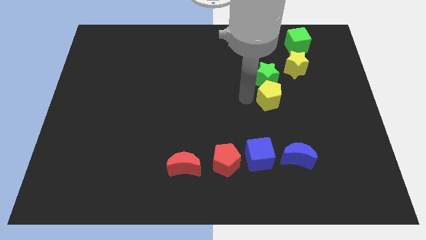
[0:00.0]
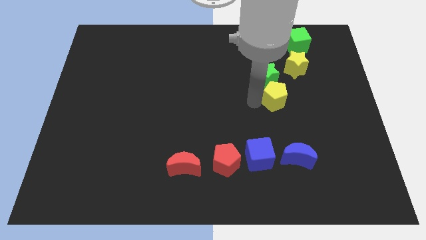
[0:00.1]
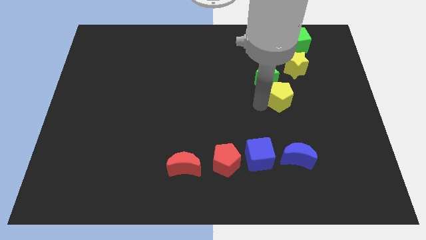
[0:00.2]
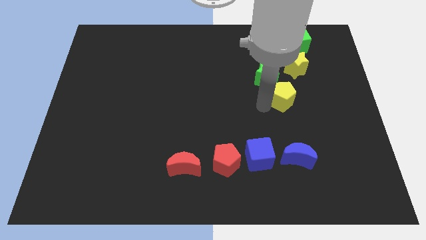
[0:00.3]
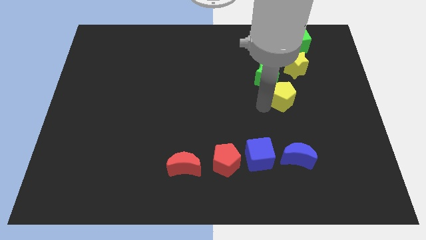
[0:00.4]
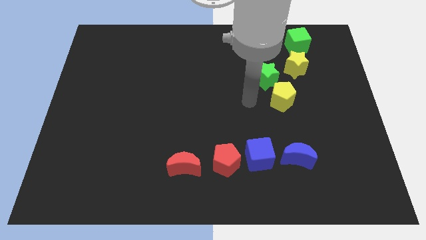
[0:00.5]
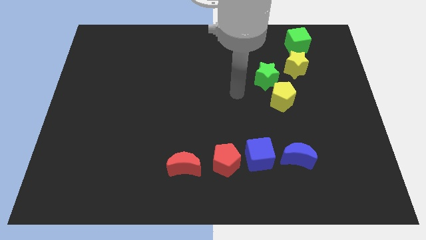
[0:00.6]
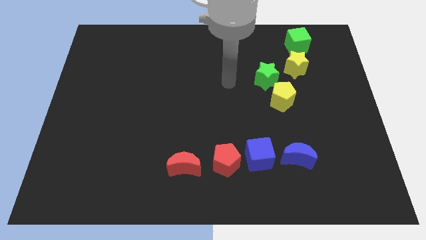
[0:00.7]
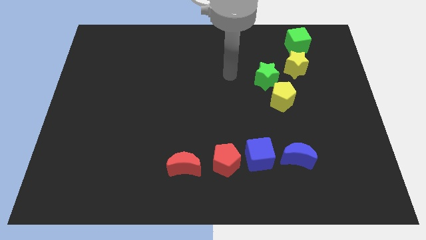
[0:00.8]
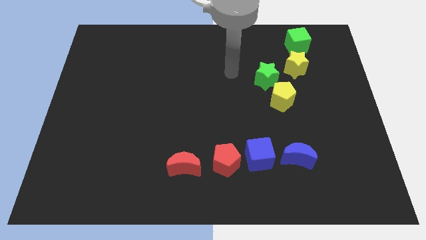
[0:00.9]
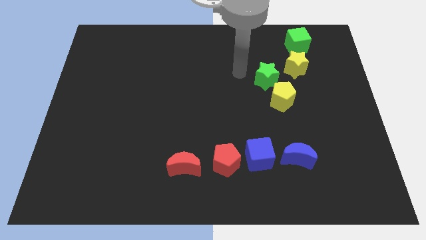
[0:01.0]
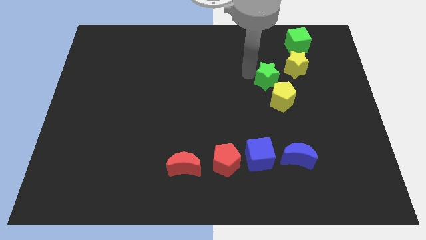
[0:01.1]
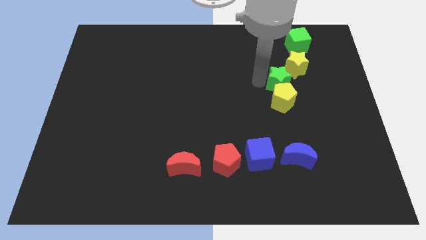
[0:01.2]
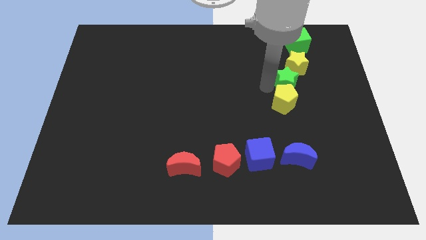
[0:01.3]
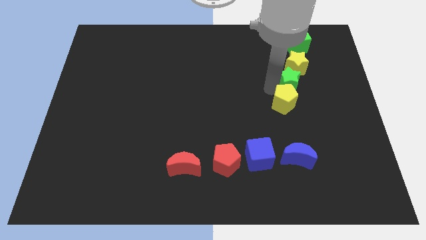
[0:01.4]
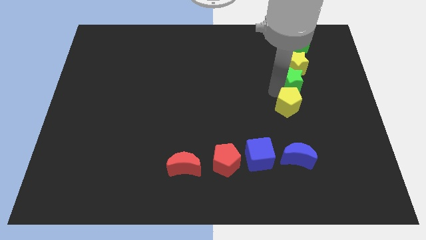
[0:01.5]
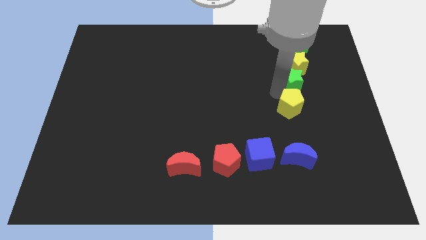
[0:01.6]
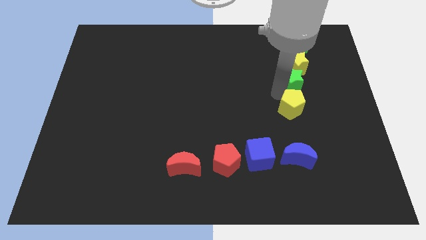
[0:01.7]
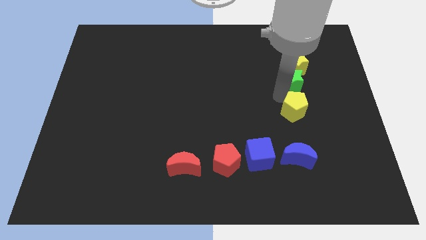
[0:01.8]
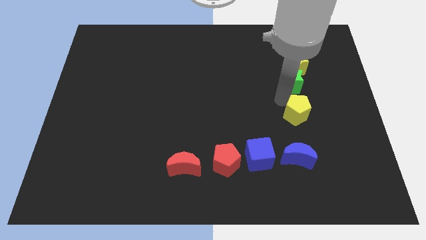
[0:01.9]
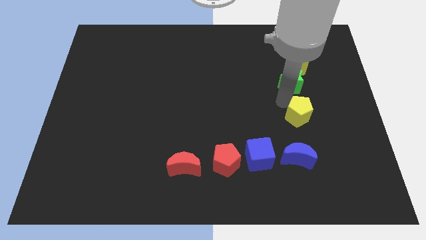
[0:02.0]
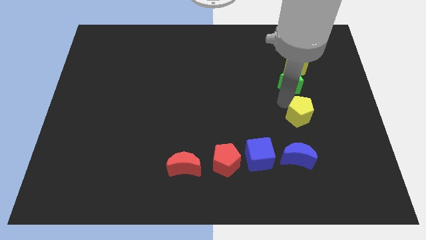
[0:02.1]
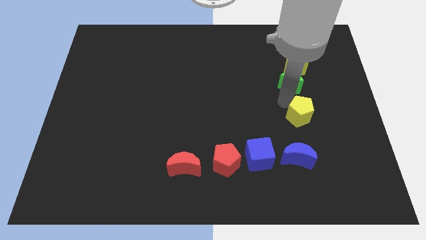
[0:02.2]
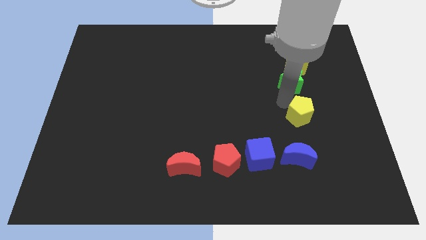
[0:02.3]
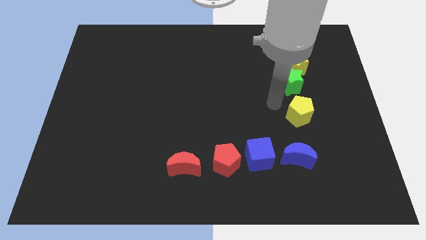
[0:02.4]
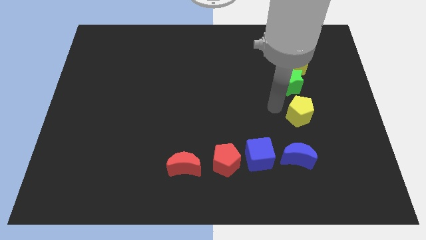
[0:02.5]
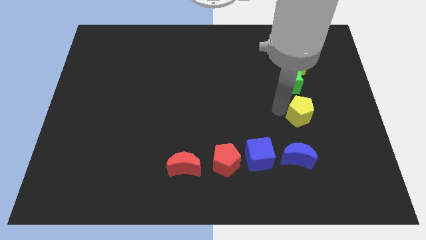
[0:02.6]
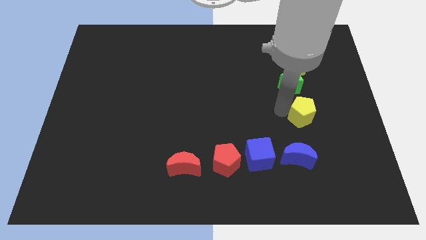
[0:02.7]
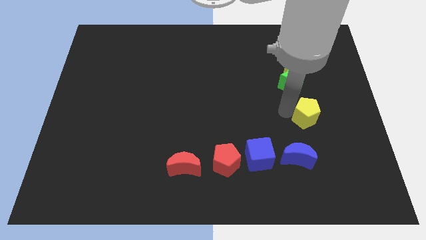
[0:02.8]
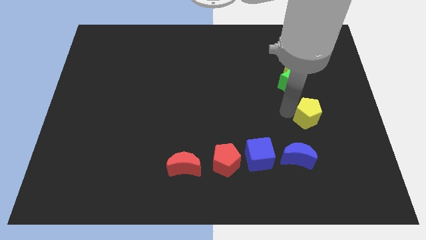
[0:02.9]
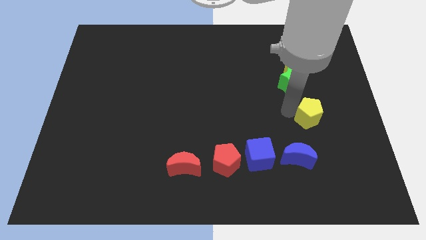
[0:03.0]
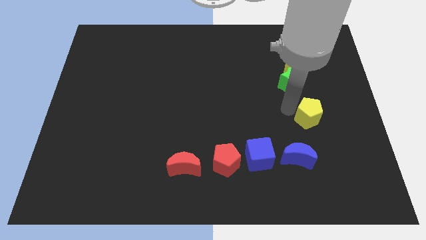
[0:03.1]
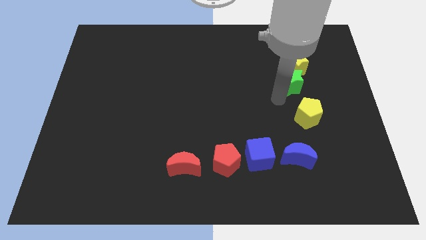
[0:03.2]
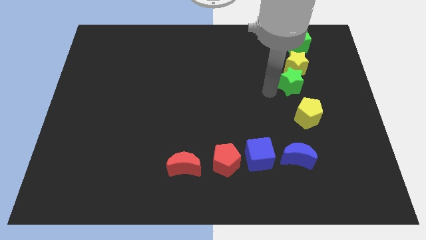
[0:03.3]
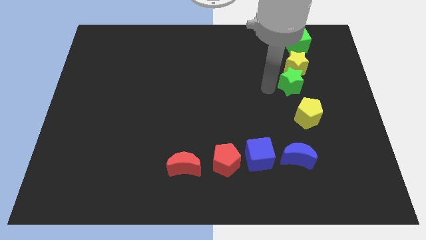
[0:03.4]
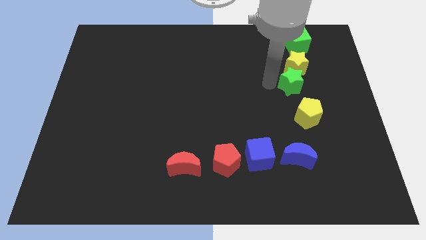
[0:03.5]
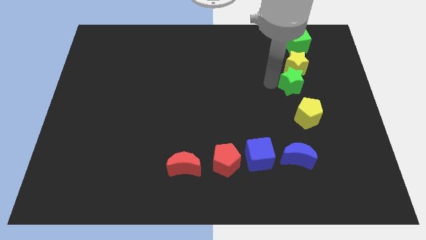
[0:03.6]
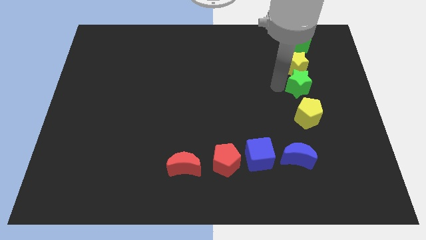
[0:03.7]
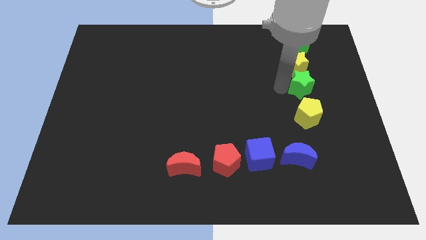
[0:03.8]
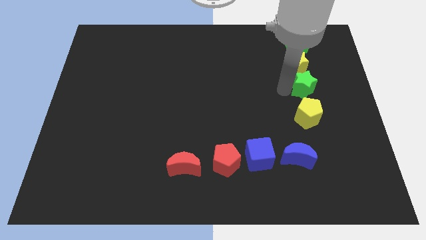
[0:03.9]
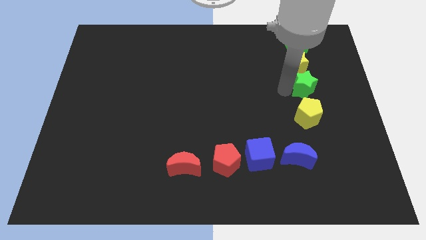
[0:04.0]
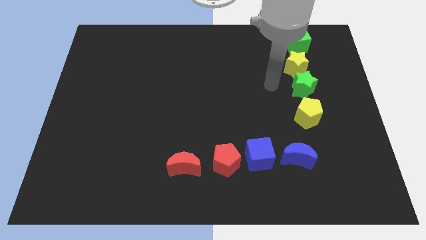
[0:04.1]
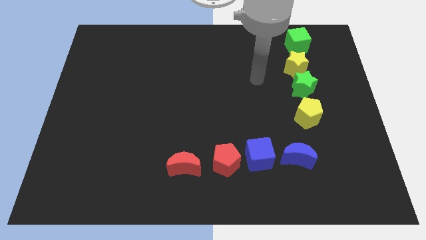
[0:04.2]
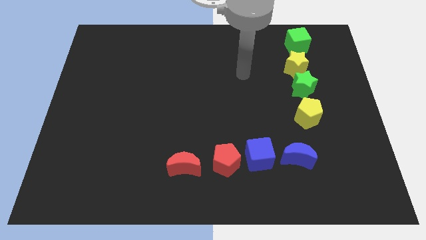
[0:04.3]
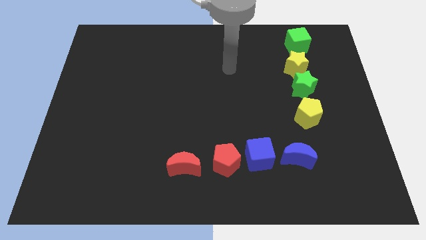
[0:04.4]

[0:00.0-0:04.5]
push the green star and yellow pentagon in a vertical line

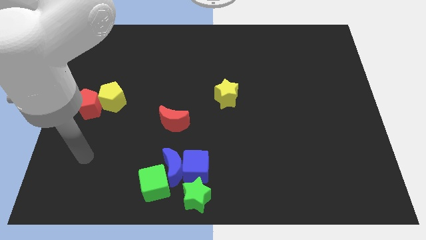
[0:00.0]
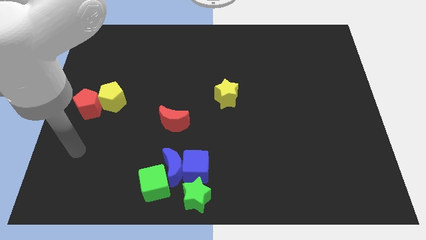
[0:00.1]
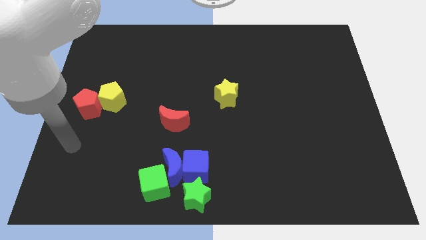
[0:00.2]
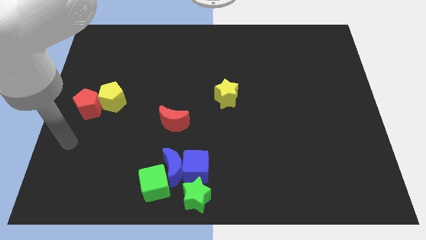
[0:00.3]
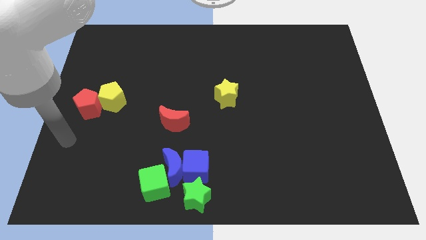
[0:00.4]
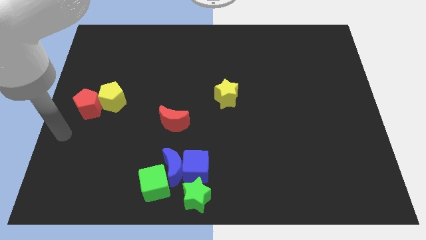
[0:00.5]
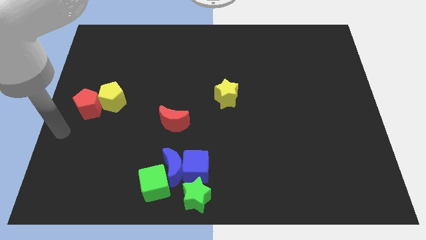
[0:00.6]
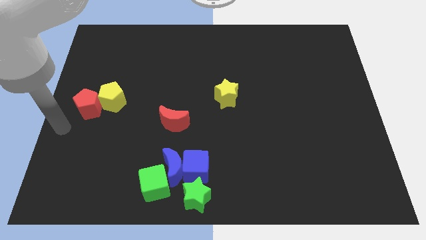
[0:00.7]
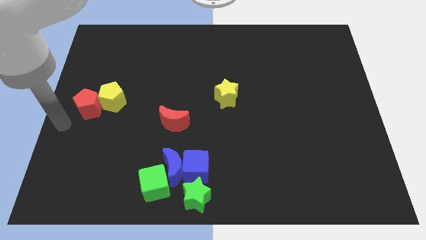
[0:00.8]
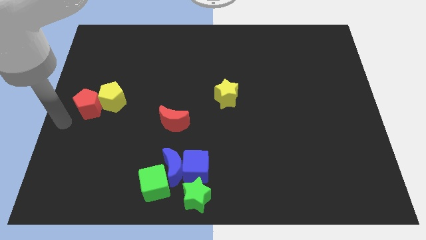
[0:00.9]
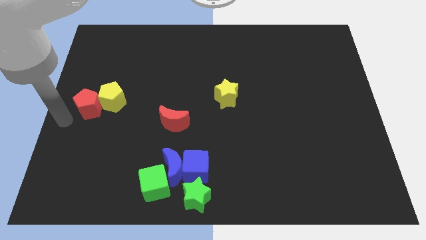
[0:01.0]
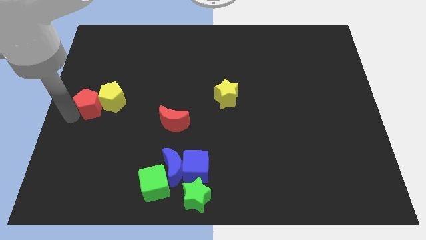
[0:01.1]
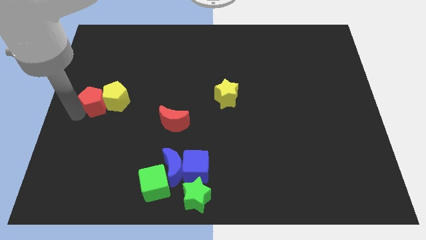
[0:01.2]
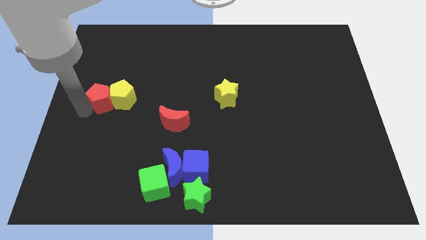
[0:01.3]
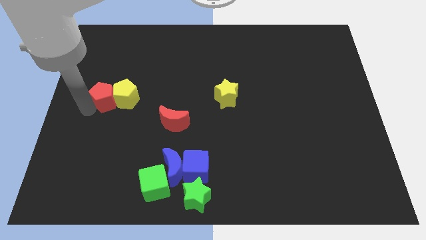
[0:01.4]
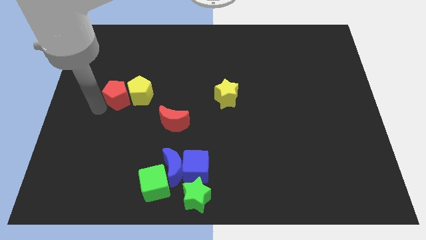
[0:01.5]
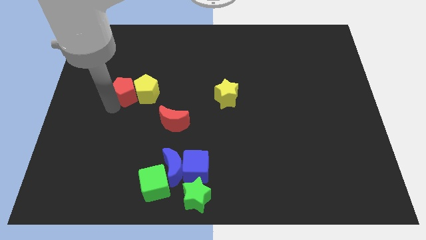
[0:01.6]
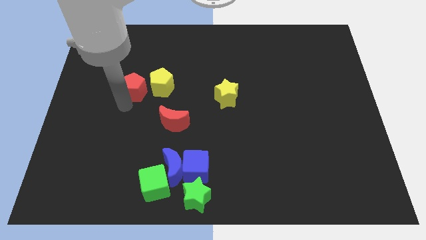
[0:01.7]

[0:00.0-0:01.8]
push the red pentagon into the yellow pentagon

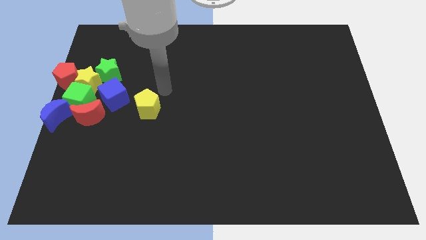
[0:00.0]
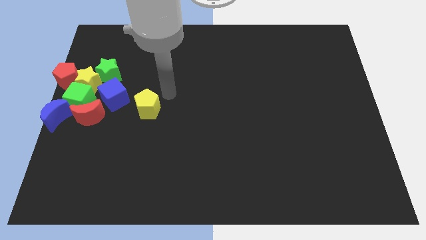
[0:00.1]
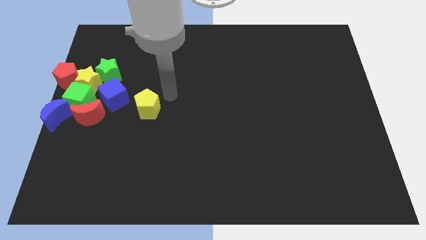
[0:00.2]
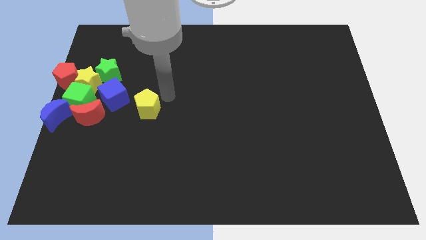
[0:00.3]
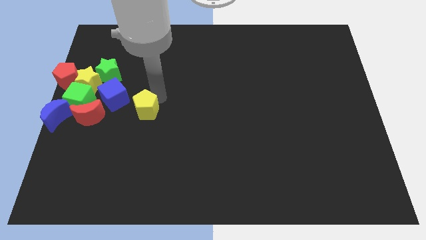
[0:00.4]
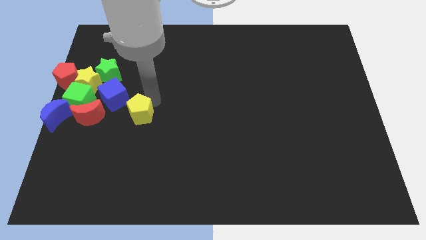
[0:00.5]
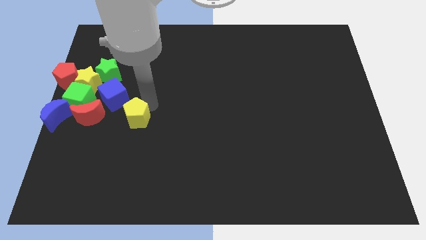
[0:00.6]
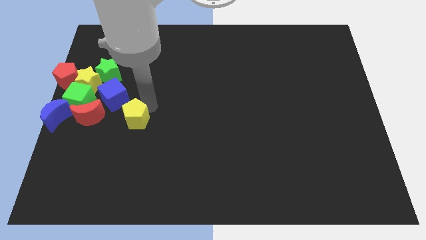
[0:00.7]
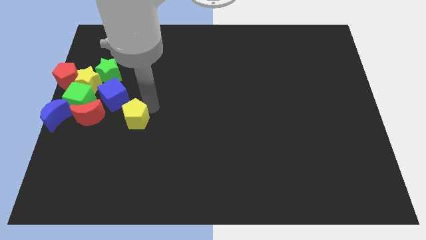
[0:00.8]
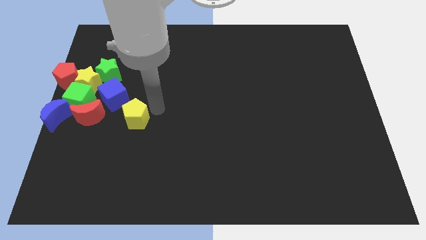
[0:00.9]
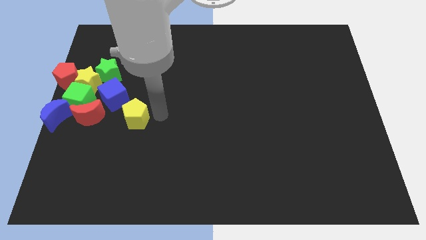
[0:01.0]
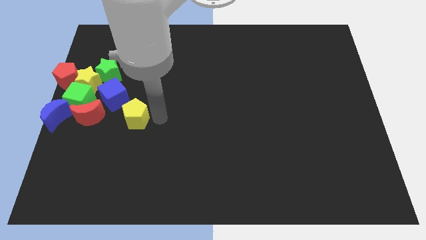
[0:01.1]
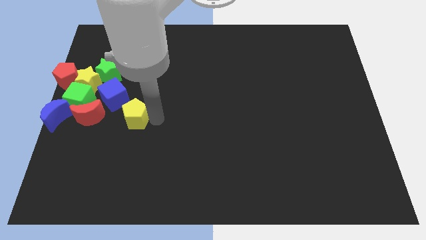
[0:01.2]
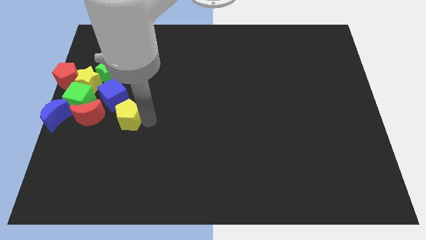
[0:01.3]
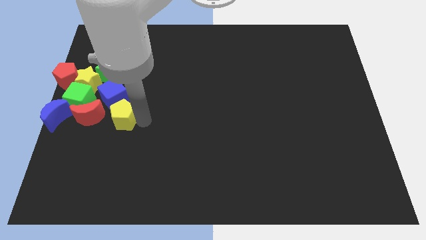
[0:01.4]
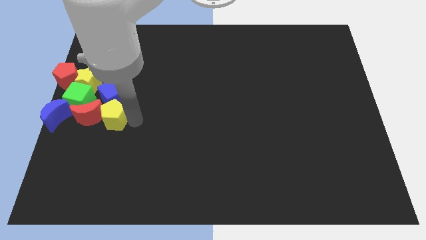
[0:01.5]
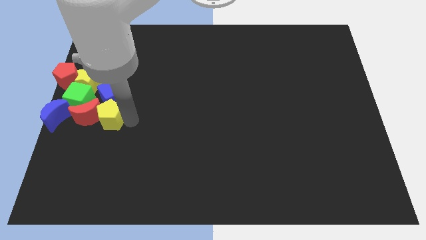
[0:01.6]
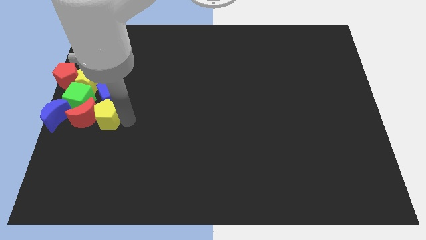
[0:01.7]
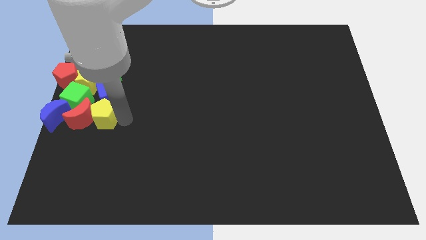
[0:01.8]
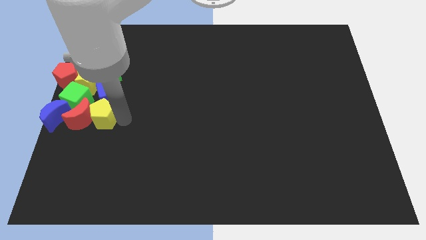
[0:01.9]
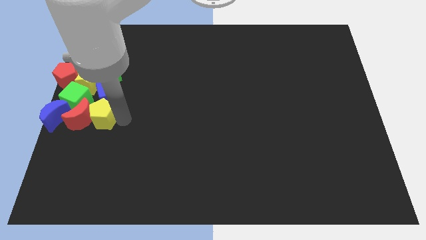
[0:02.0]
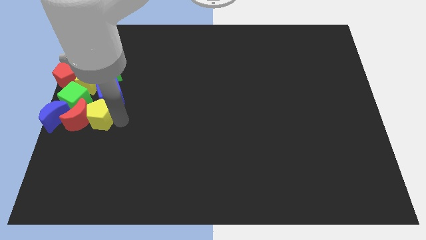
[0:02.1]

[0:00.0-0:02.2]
push yellow pentagon into the group of blocks at the middle left corner of the board

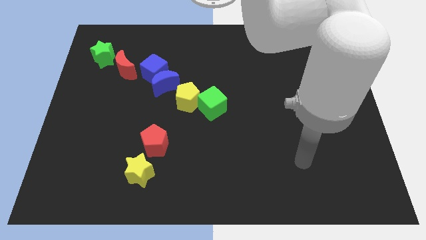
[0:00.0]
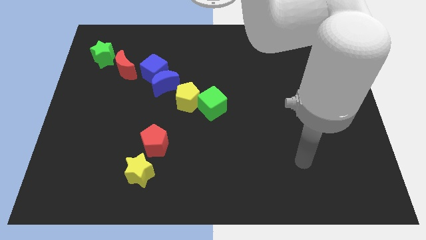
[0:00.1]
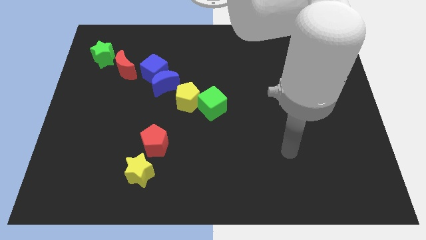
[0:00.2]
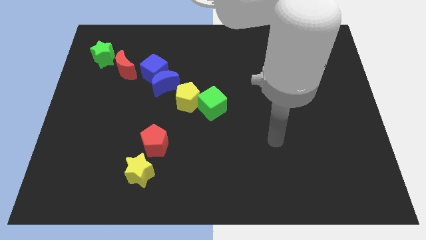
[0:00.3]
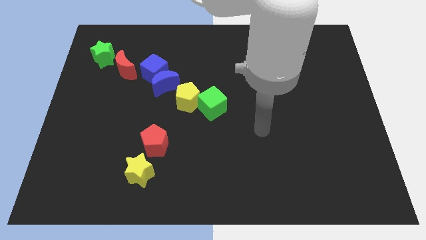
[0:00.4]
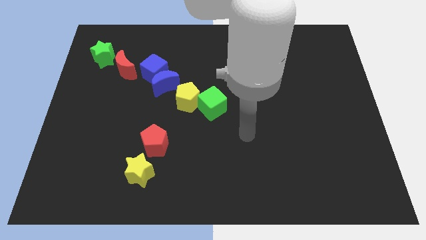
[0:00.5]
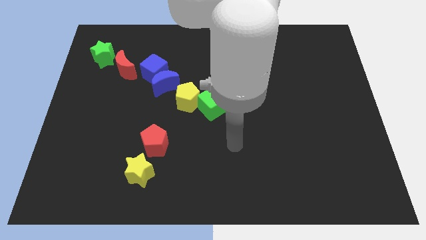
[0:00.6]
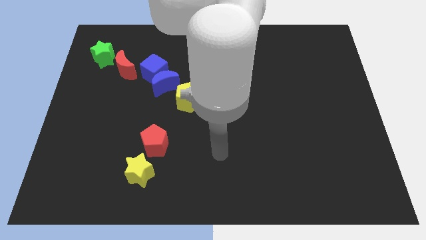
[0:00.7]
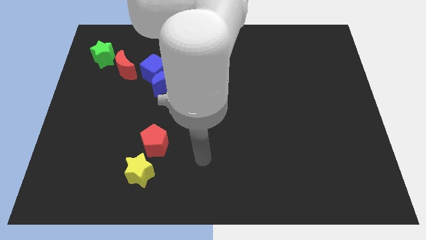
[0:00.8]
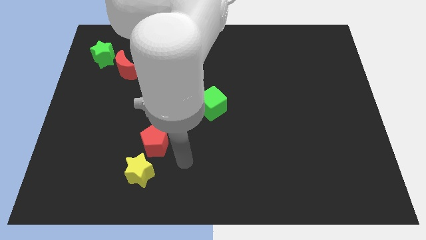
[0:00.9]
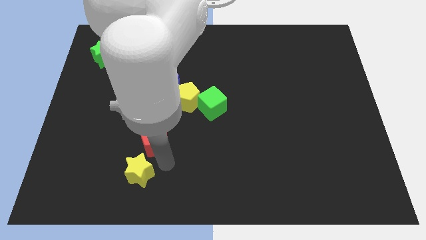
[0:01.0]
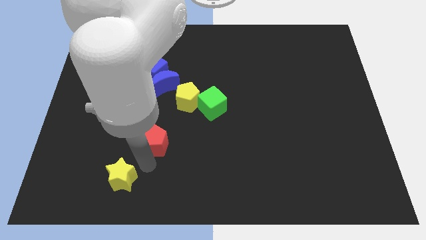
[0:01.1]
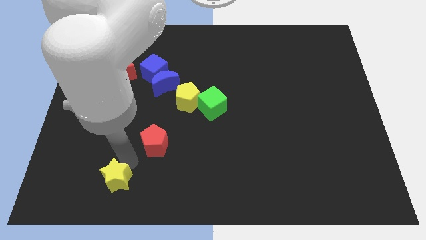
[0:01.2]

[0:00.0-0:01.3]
move the yellow star away from the red pentagon
